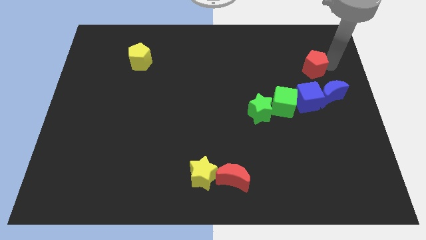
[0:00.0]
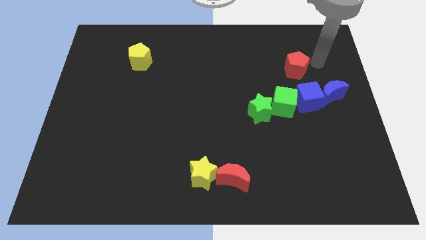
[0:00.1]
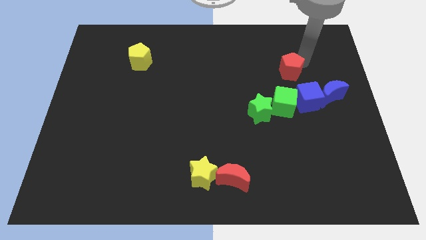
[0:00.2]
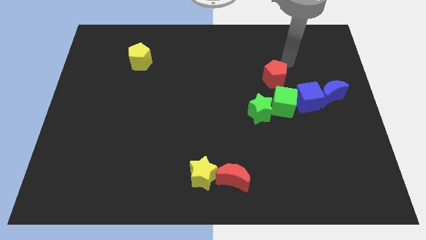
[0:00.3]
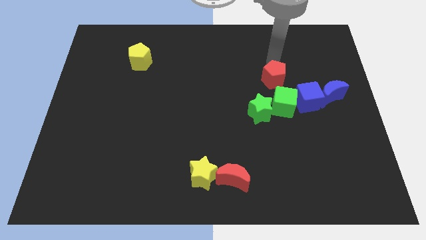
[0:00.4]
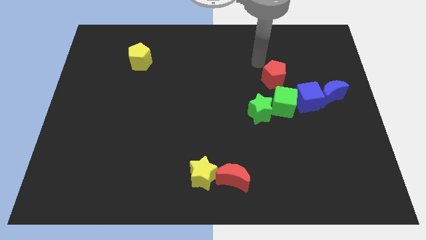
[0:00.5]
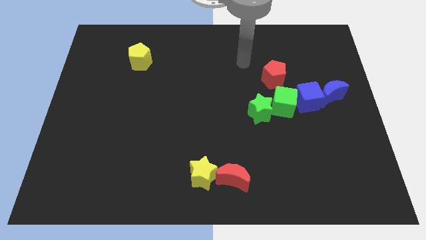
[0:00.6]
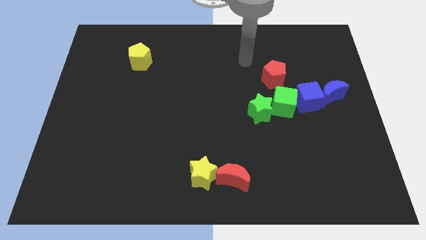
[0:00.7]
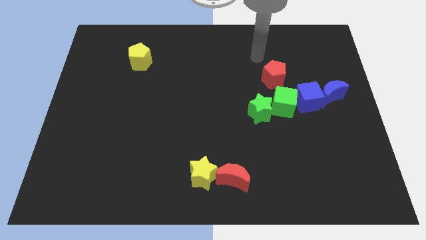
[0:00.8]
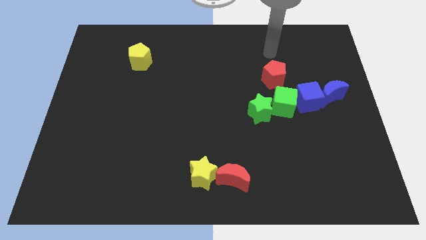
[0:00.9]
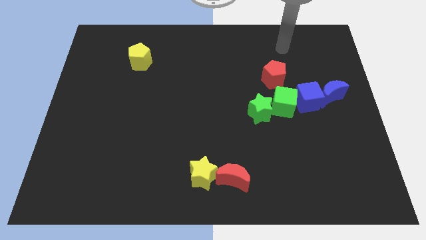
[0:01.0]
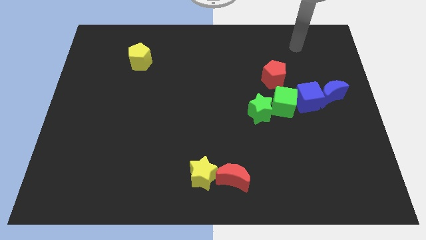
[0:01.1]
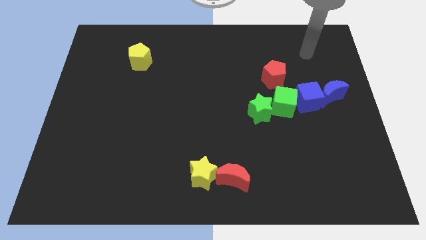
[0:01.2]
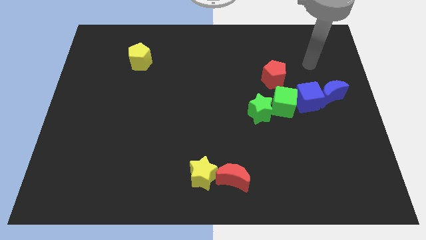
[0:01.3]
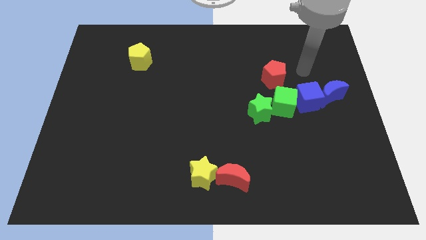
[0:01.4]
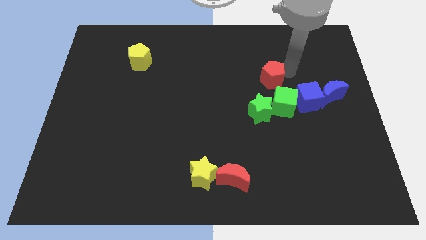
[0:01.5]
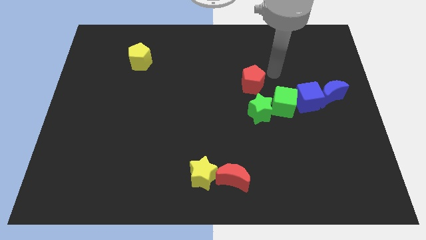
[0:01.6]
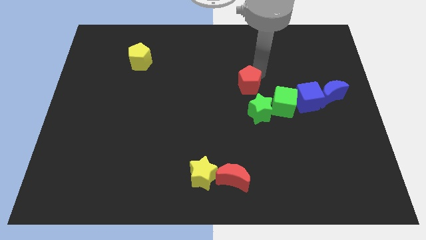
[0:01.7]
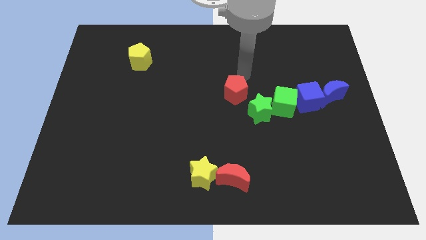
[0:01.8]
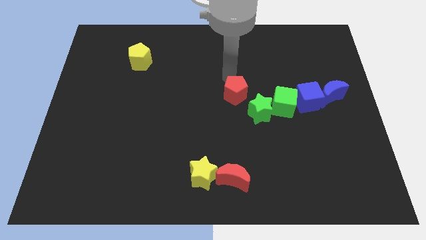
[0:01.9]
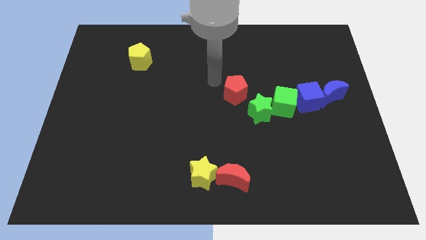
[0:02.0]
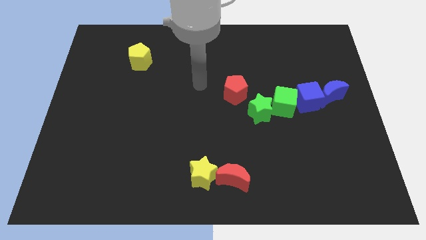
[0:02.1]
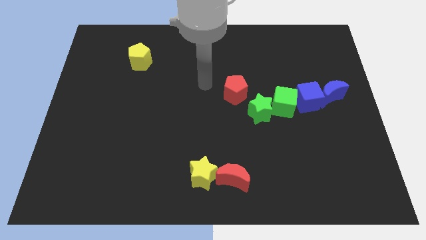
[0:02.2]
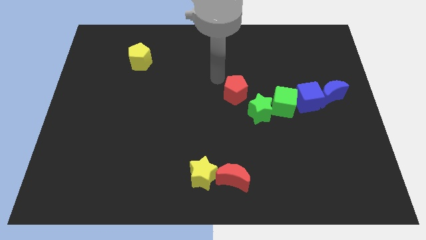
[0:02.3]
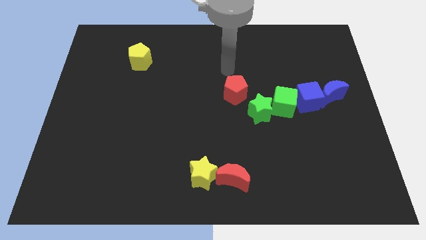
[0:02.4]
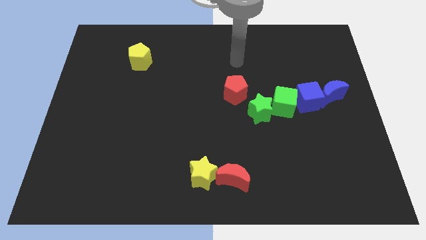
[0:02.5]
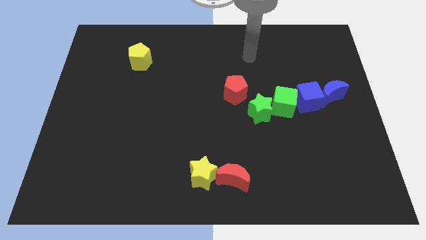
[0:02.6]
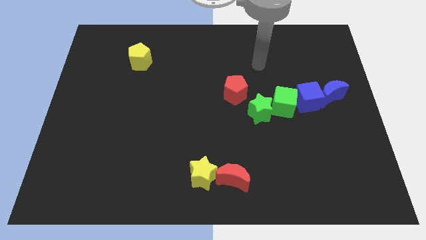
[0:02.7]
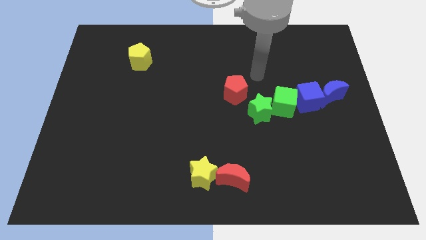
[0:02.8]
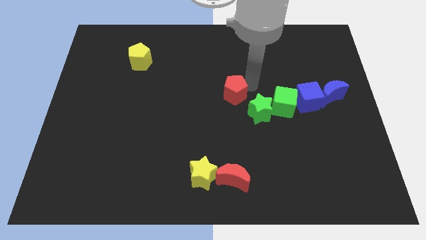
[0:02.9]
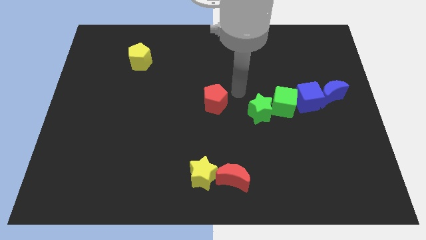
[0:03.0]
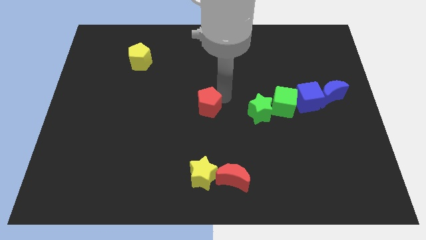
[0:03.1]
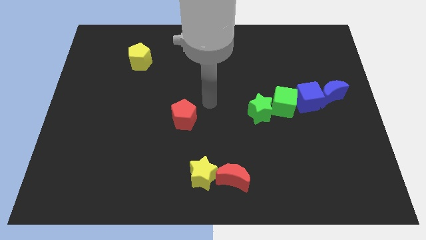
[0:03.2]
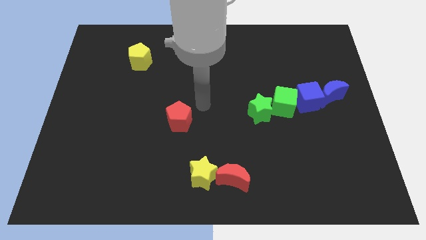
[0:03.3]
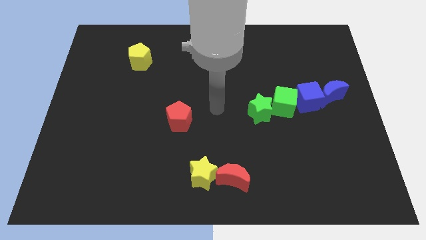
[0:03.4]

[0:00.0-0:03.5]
place the red pentagon diagonally in between the yellow star and the yellow pentagon

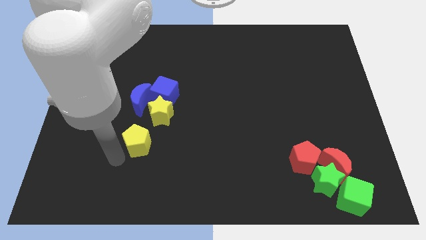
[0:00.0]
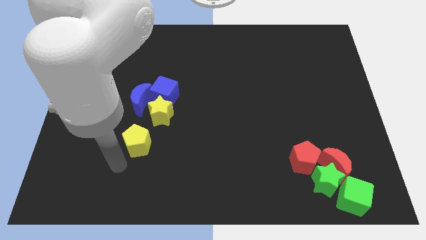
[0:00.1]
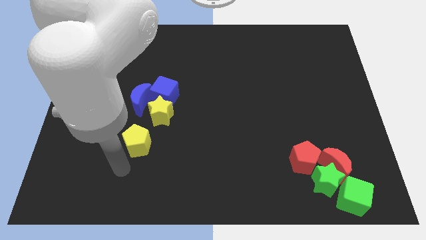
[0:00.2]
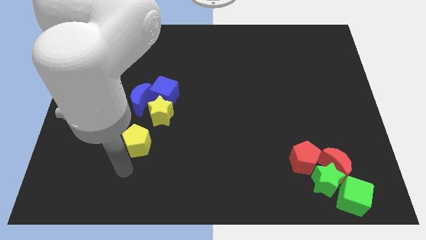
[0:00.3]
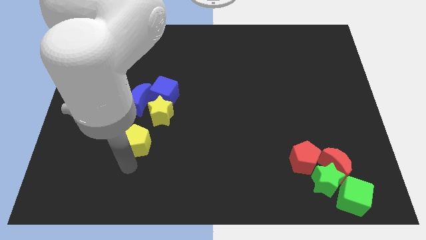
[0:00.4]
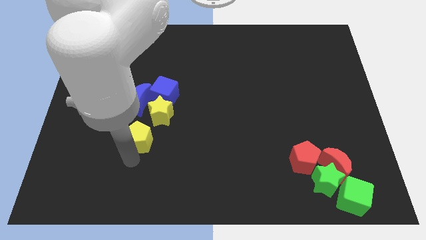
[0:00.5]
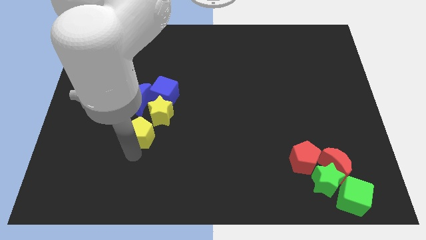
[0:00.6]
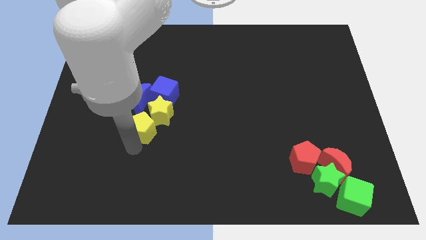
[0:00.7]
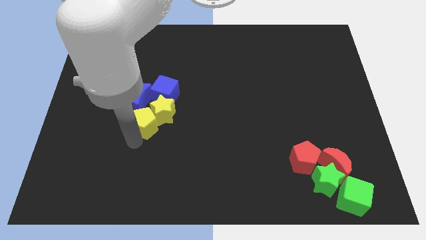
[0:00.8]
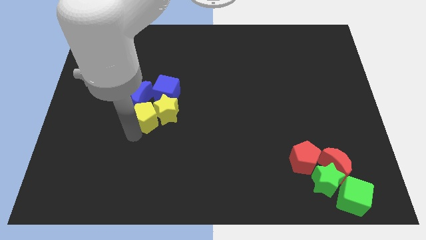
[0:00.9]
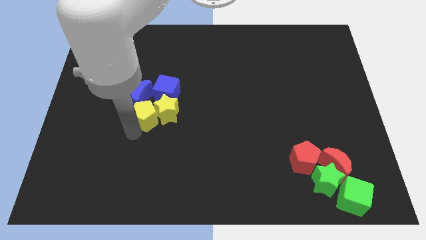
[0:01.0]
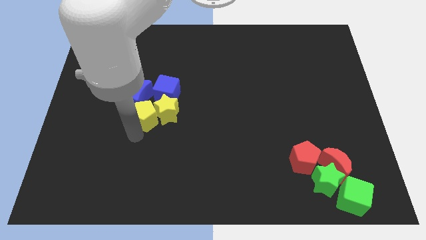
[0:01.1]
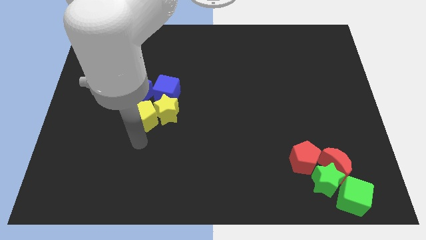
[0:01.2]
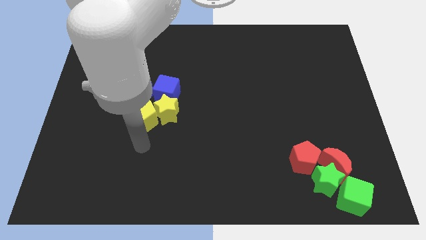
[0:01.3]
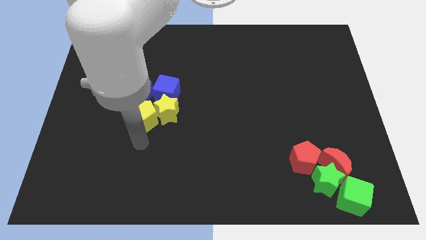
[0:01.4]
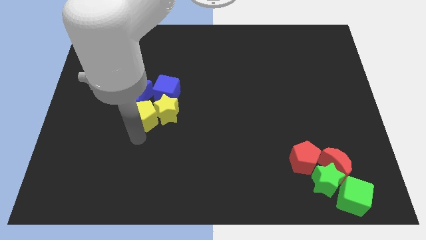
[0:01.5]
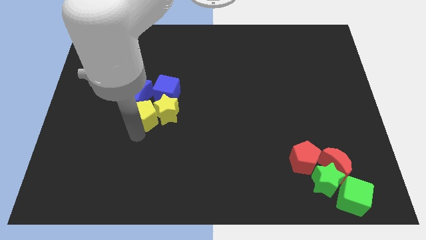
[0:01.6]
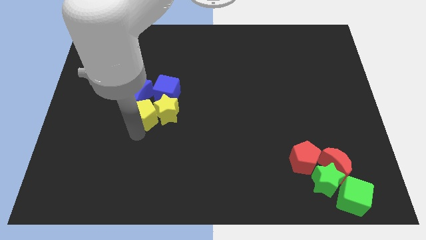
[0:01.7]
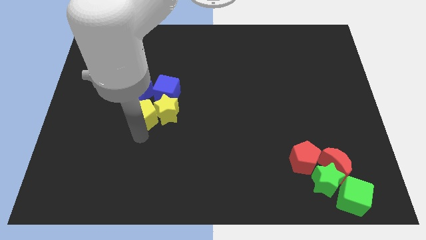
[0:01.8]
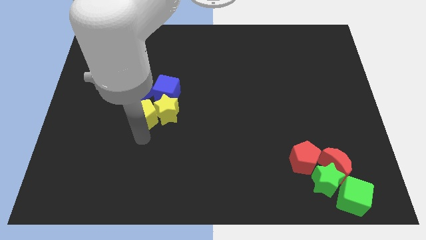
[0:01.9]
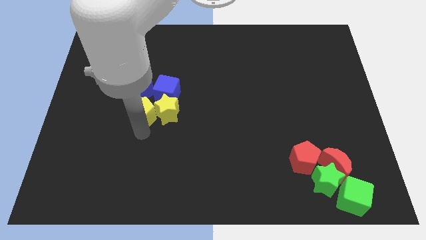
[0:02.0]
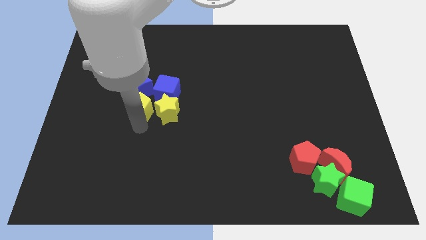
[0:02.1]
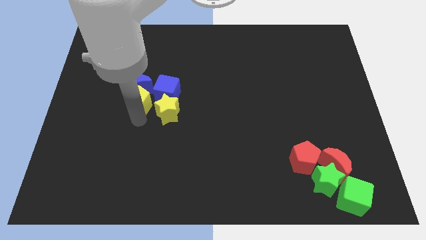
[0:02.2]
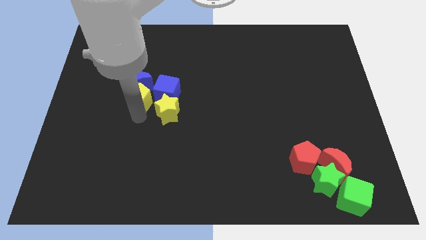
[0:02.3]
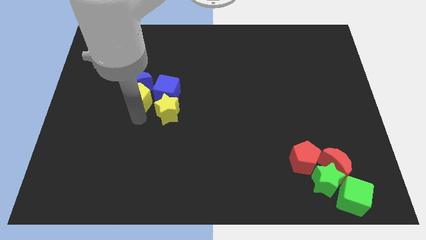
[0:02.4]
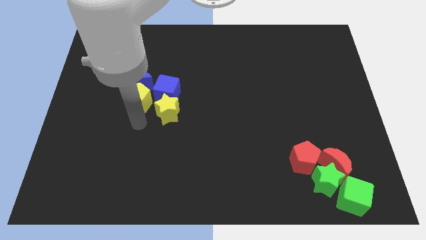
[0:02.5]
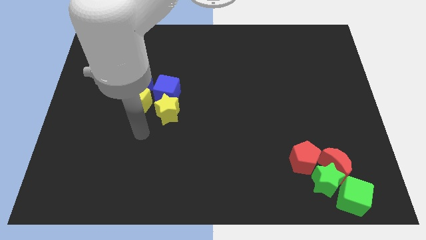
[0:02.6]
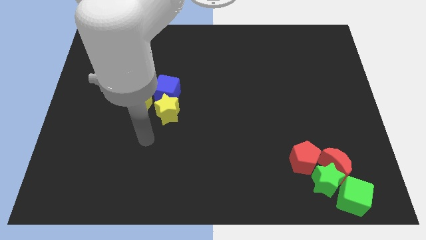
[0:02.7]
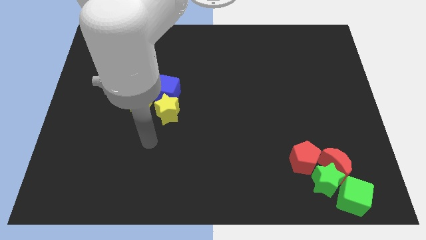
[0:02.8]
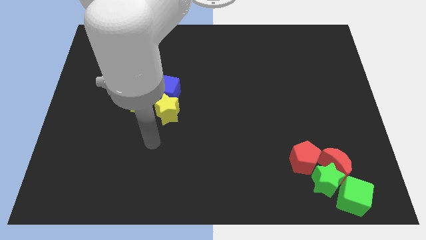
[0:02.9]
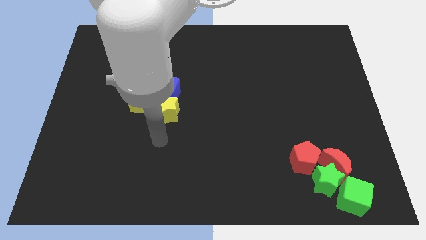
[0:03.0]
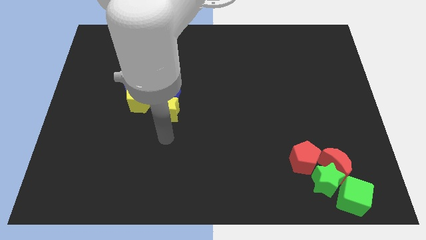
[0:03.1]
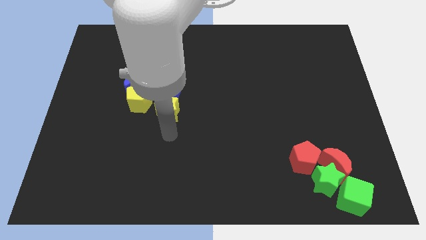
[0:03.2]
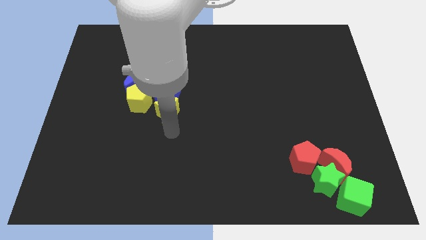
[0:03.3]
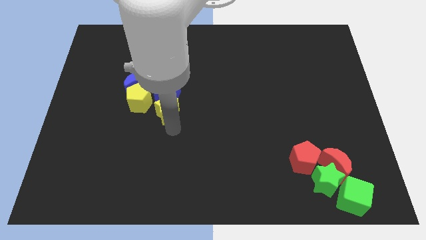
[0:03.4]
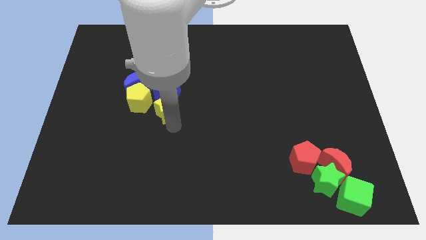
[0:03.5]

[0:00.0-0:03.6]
push the yellow pentagon into the blue crescent

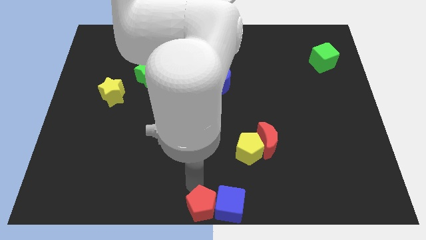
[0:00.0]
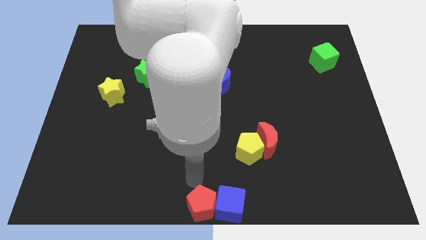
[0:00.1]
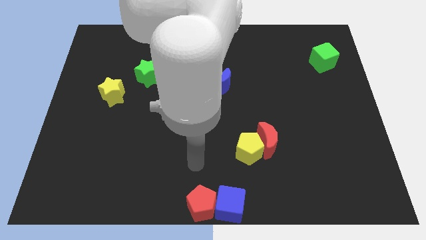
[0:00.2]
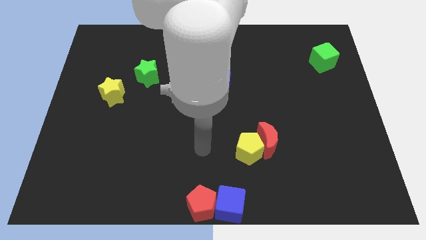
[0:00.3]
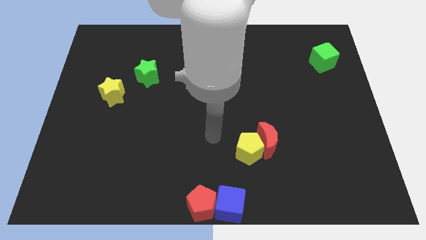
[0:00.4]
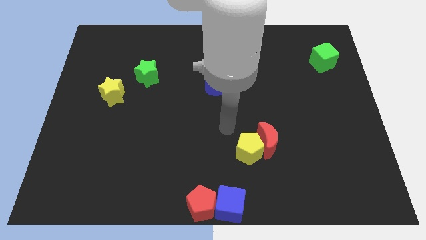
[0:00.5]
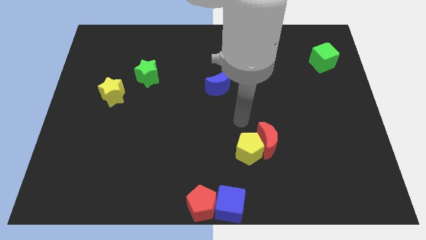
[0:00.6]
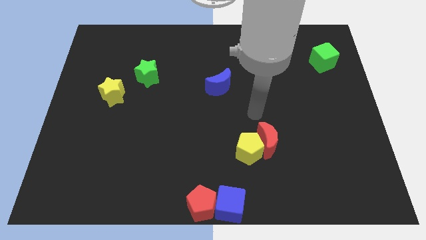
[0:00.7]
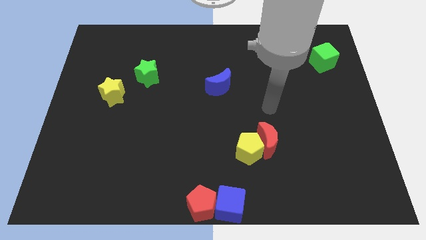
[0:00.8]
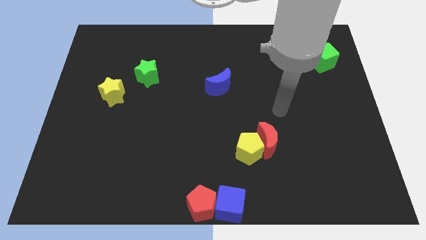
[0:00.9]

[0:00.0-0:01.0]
go away from the red pentagon

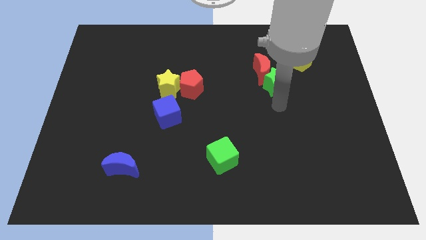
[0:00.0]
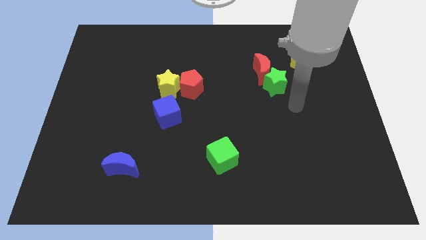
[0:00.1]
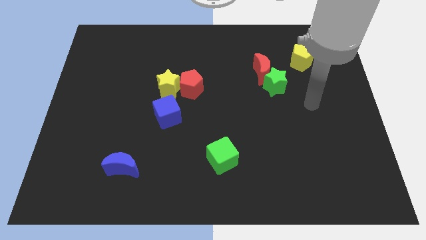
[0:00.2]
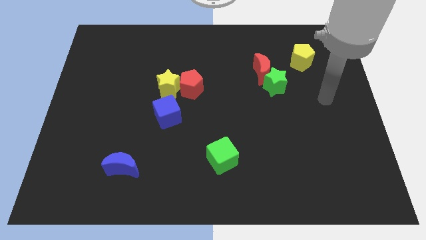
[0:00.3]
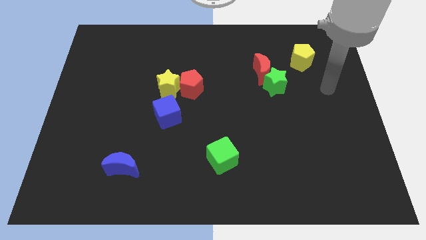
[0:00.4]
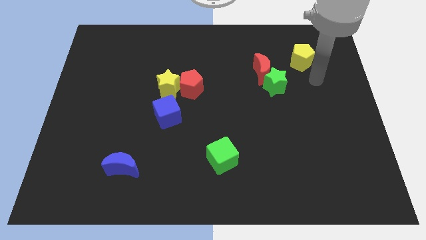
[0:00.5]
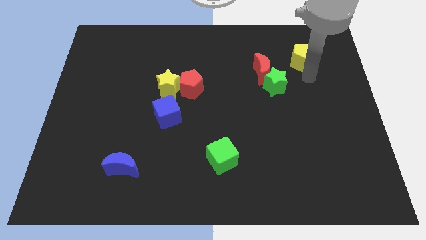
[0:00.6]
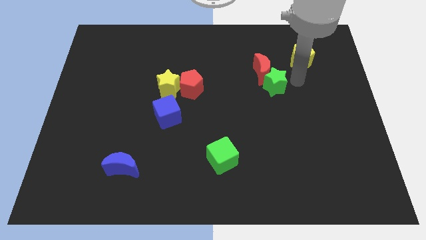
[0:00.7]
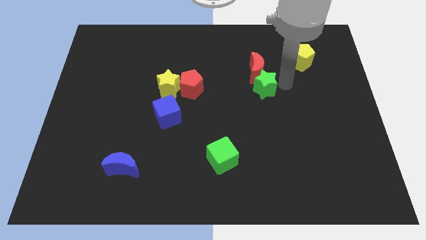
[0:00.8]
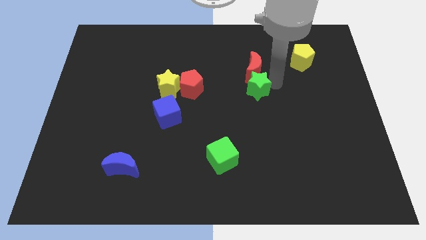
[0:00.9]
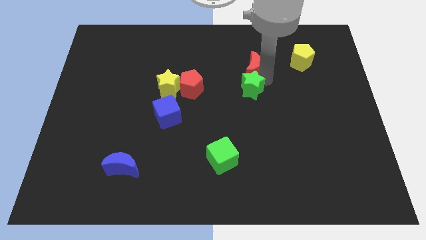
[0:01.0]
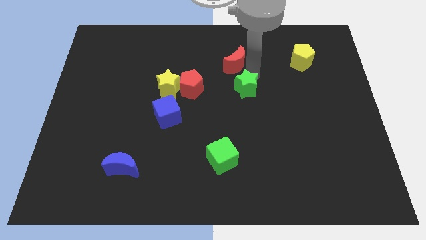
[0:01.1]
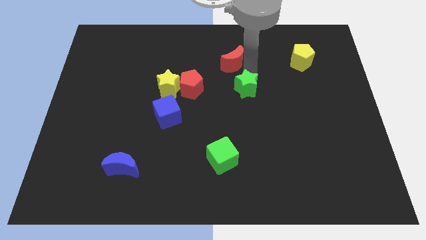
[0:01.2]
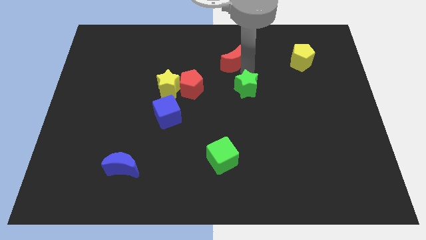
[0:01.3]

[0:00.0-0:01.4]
go and separate the blue crescent and the green star
